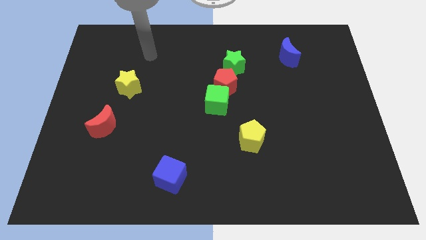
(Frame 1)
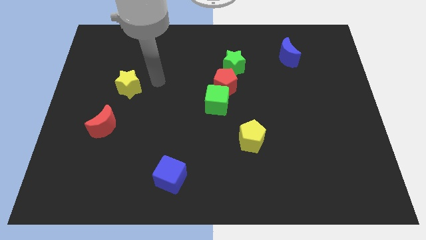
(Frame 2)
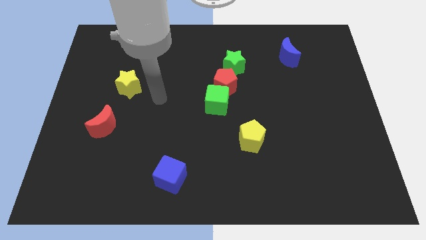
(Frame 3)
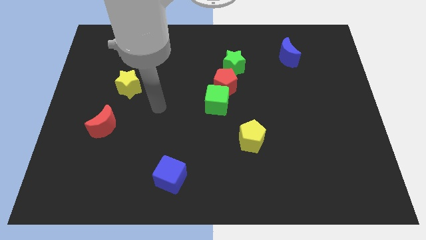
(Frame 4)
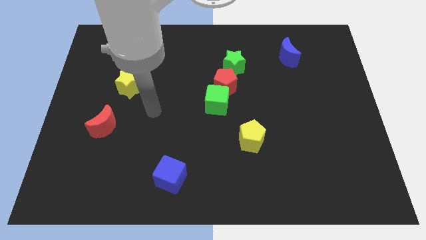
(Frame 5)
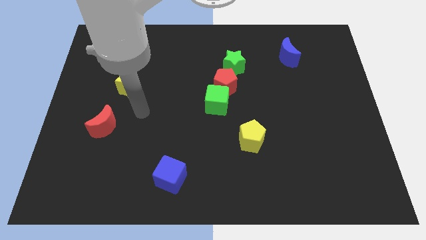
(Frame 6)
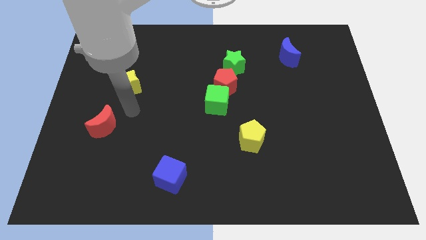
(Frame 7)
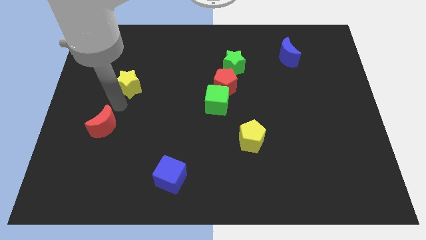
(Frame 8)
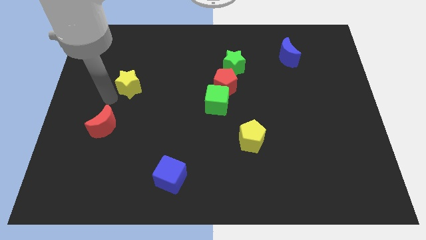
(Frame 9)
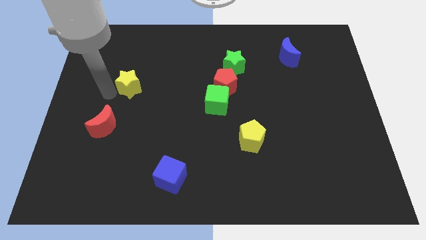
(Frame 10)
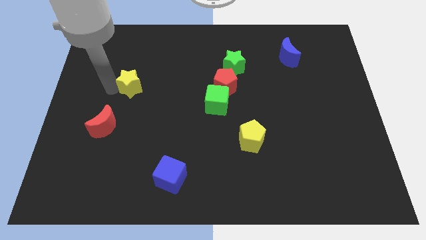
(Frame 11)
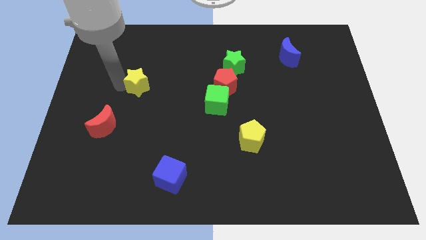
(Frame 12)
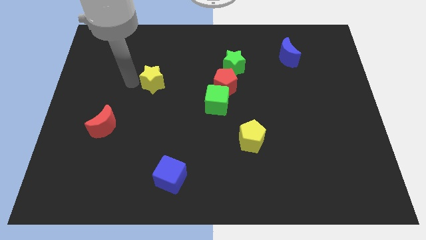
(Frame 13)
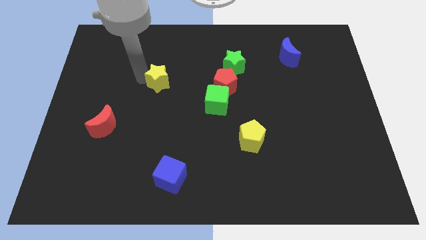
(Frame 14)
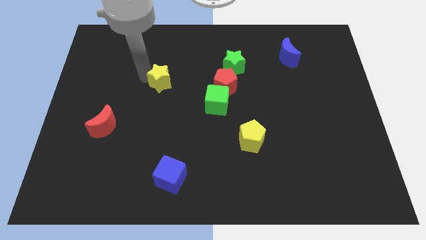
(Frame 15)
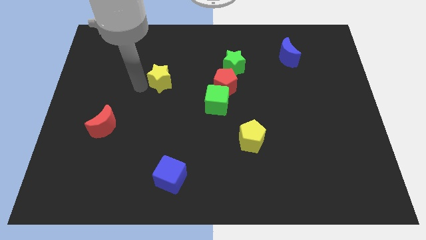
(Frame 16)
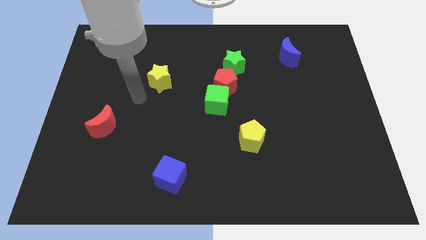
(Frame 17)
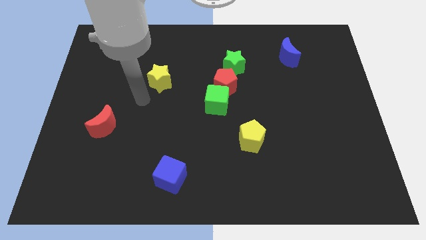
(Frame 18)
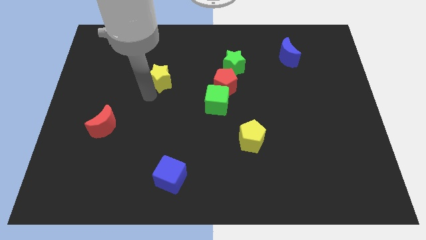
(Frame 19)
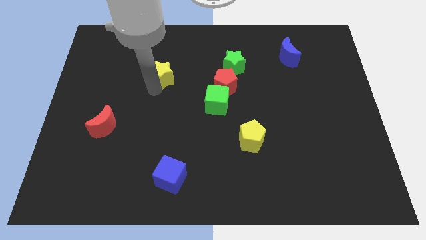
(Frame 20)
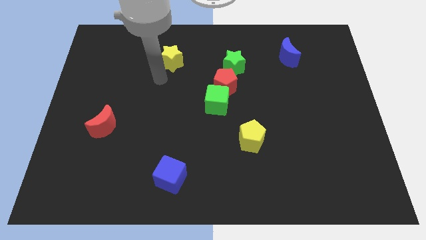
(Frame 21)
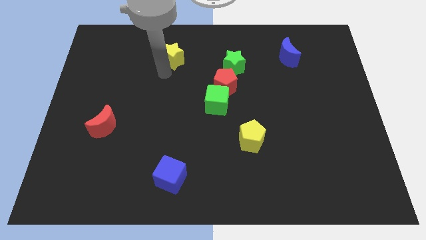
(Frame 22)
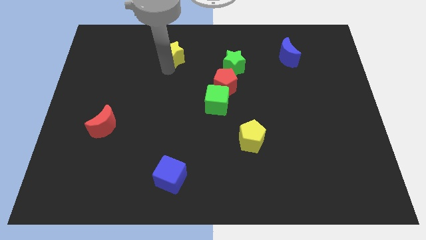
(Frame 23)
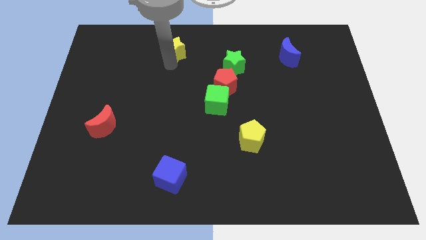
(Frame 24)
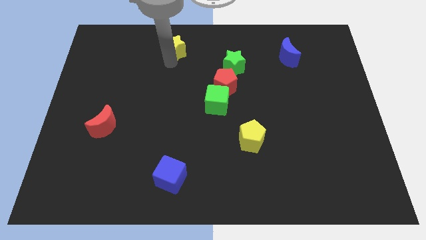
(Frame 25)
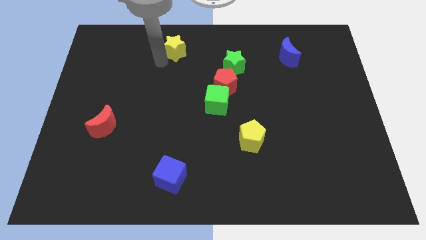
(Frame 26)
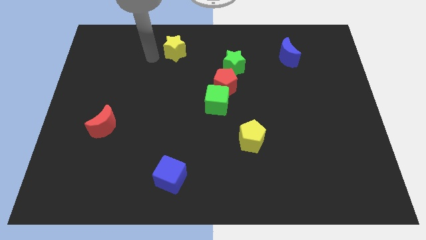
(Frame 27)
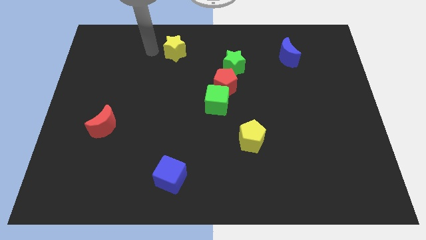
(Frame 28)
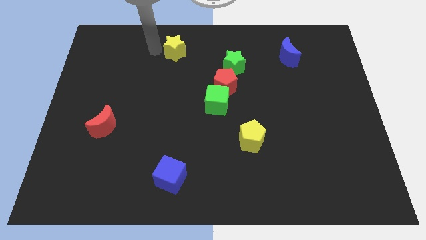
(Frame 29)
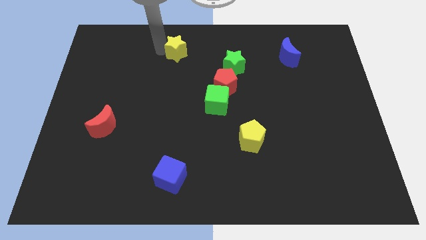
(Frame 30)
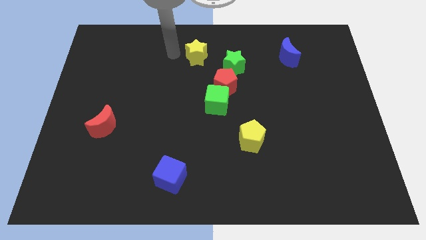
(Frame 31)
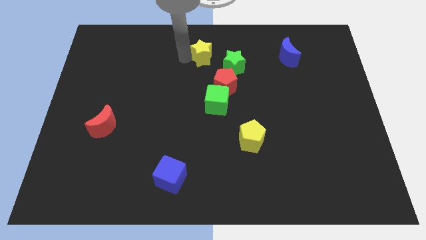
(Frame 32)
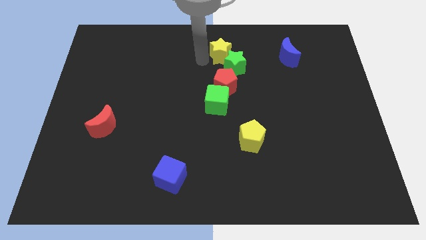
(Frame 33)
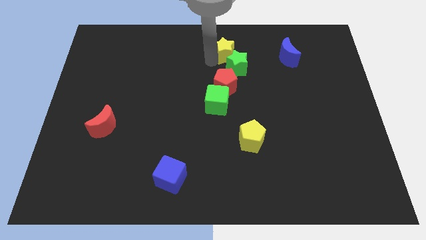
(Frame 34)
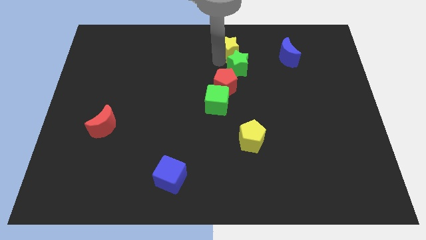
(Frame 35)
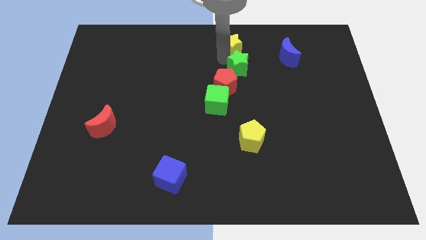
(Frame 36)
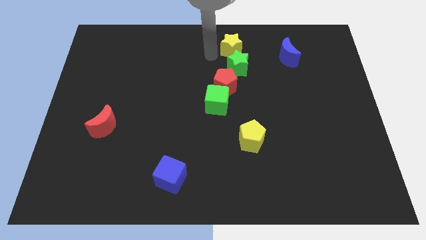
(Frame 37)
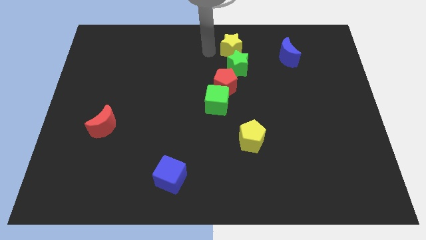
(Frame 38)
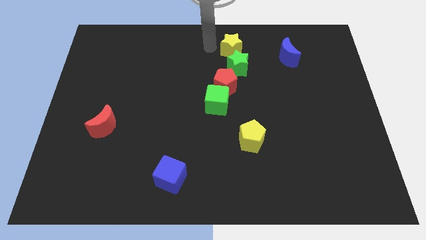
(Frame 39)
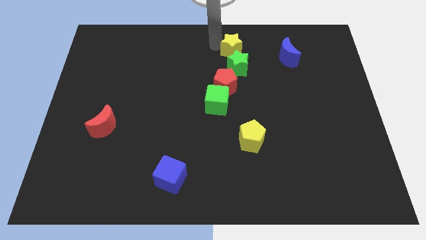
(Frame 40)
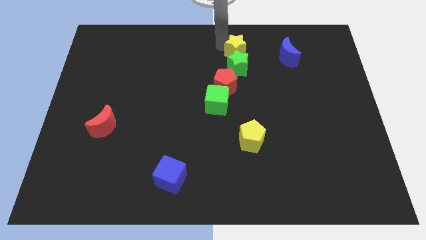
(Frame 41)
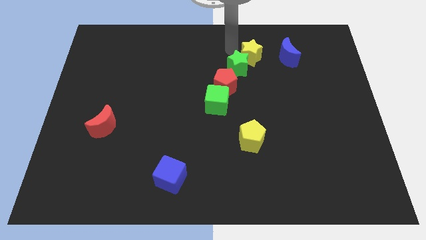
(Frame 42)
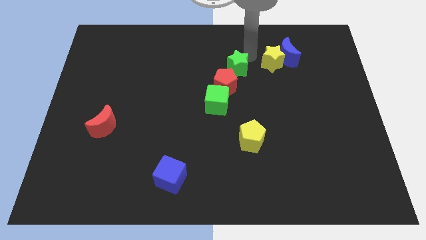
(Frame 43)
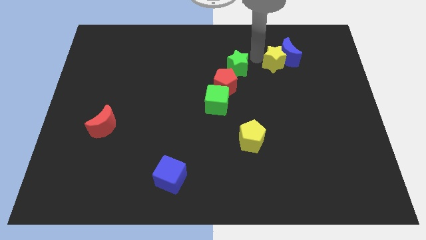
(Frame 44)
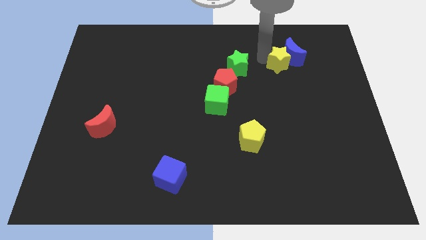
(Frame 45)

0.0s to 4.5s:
slide the yellow star next to the blue moon

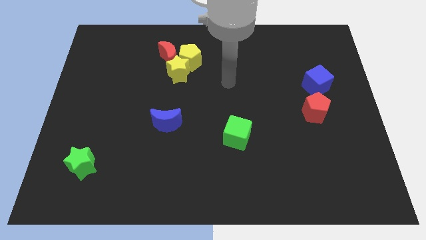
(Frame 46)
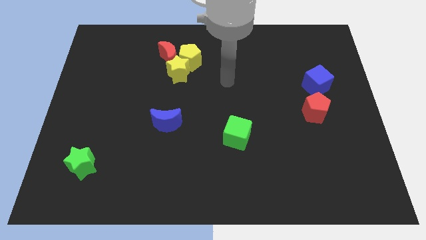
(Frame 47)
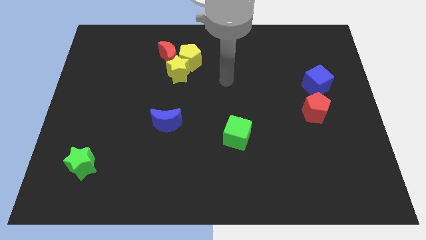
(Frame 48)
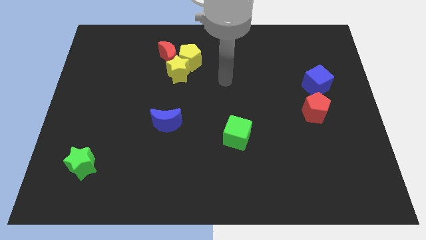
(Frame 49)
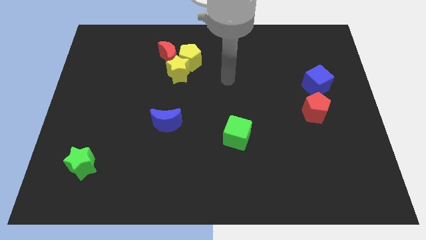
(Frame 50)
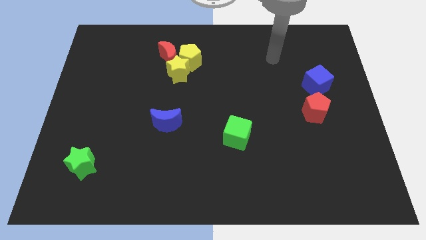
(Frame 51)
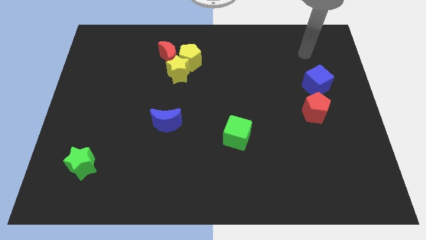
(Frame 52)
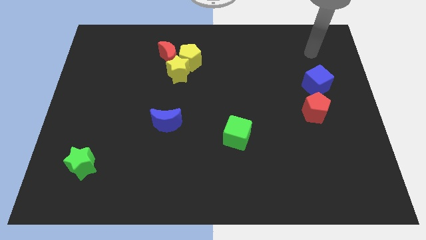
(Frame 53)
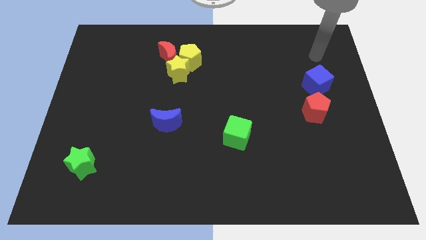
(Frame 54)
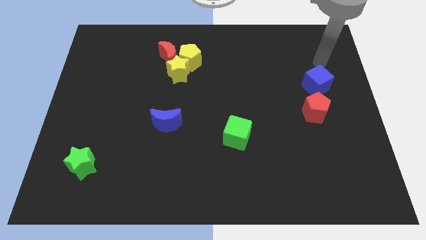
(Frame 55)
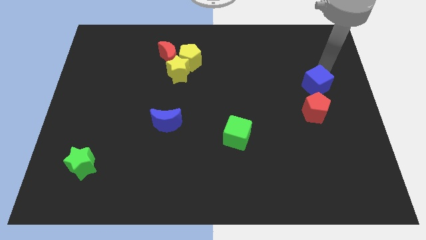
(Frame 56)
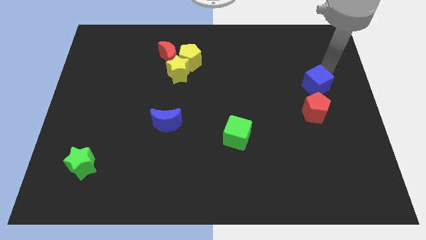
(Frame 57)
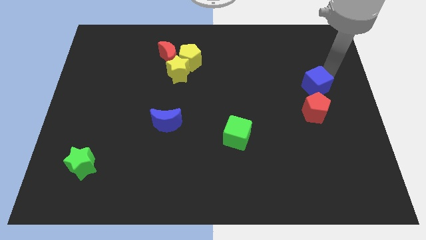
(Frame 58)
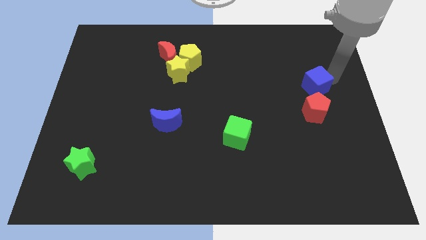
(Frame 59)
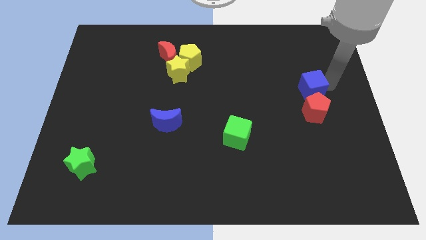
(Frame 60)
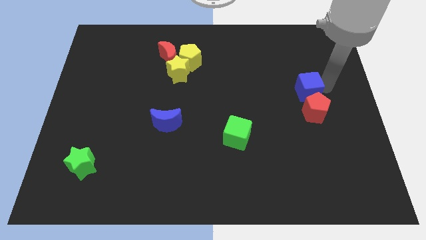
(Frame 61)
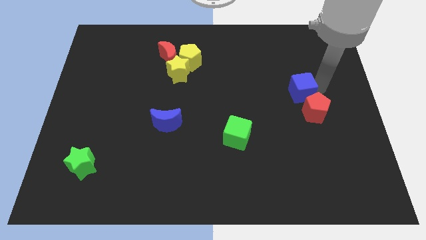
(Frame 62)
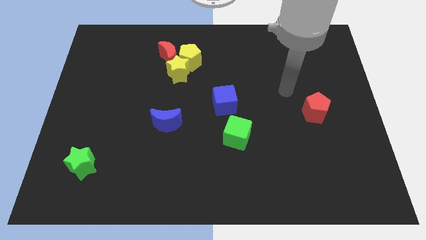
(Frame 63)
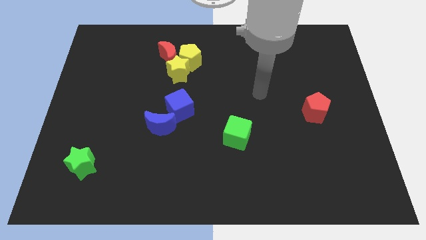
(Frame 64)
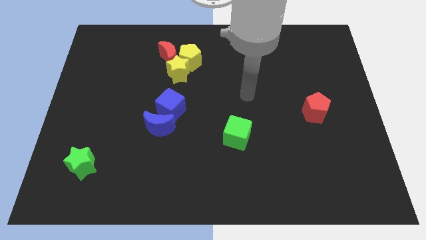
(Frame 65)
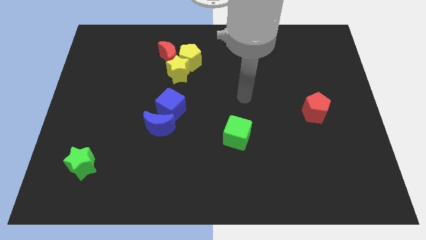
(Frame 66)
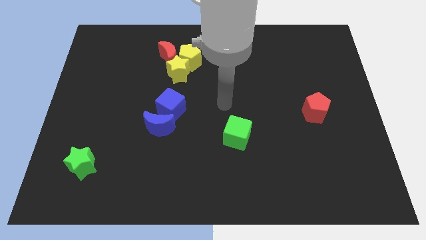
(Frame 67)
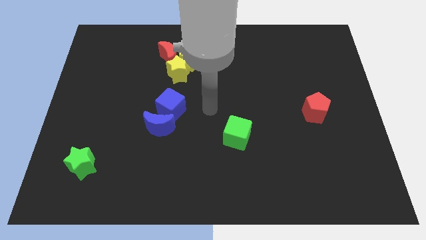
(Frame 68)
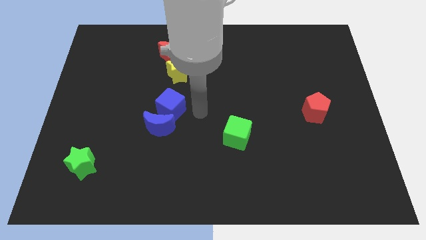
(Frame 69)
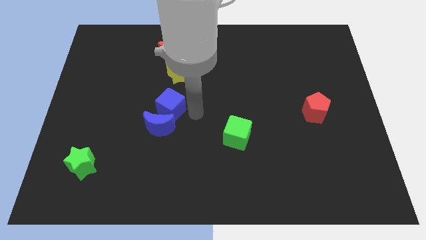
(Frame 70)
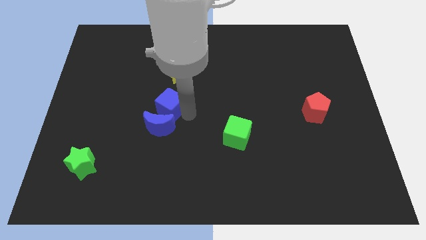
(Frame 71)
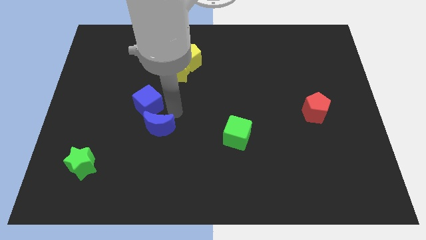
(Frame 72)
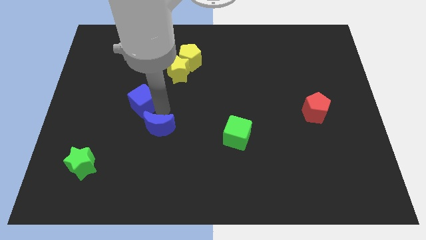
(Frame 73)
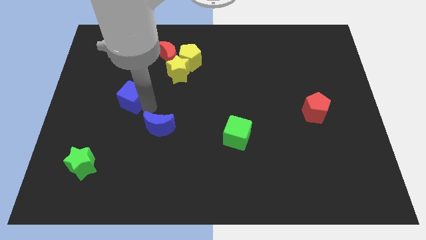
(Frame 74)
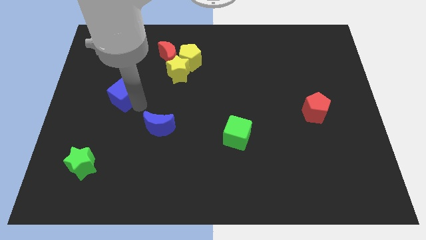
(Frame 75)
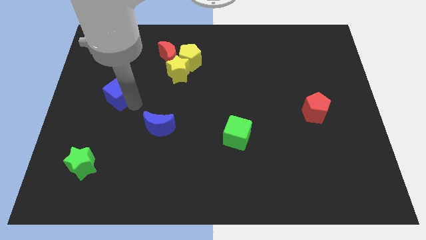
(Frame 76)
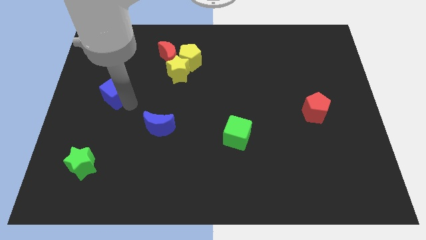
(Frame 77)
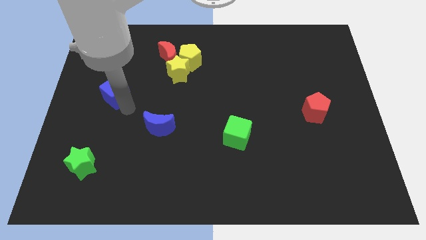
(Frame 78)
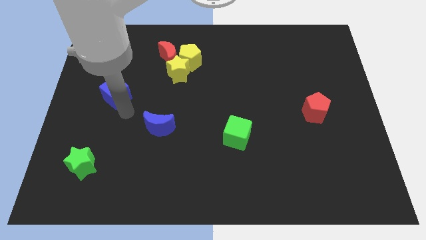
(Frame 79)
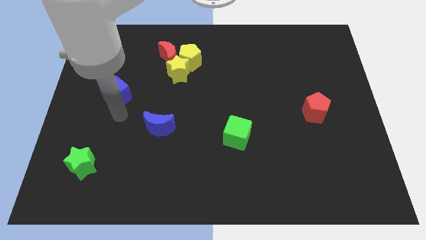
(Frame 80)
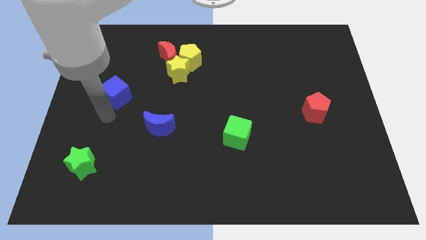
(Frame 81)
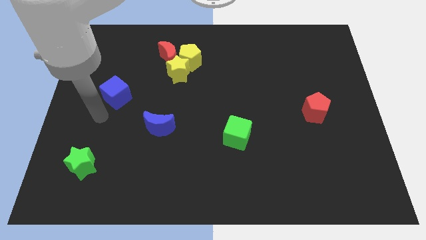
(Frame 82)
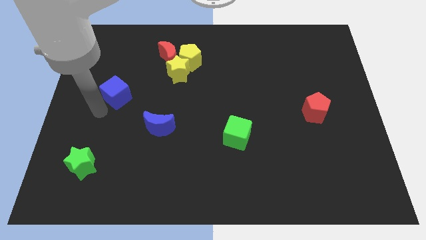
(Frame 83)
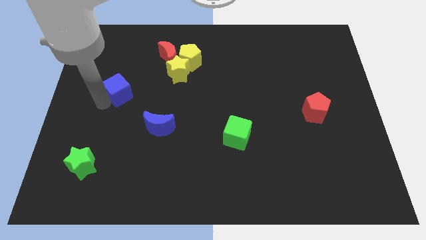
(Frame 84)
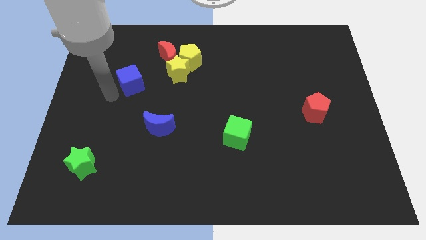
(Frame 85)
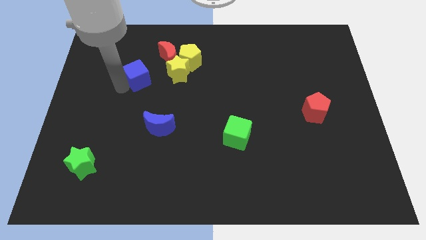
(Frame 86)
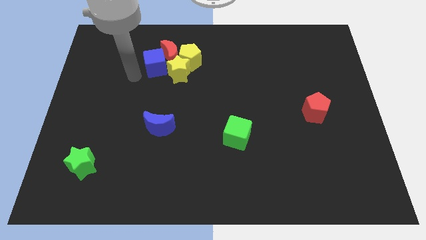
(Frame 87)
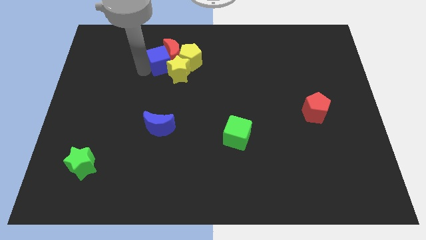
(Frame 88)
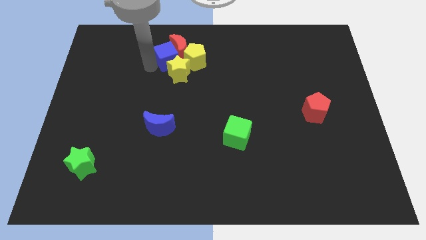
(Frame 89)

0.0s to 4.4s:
slide the blue cube next to the red moon
